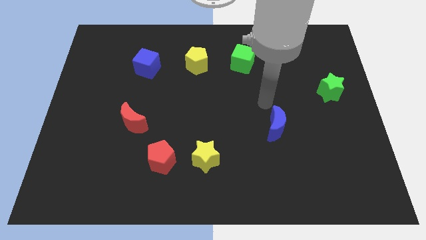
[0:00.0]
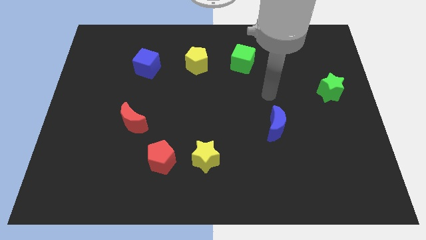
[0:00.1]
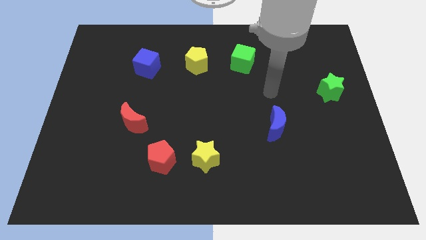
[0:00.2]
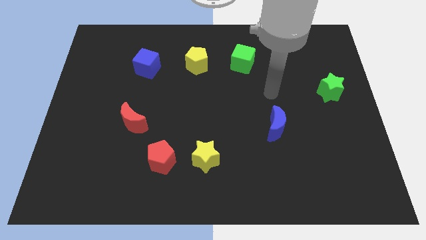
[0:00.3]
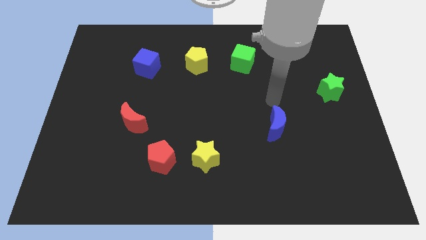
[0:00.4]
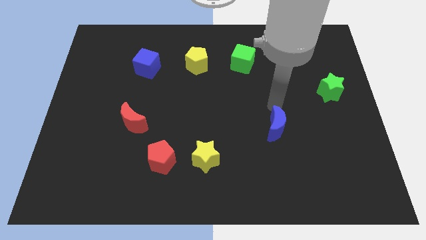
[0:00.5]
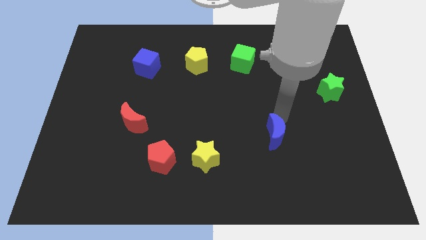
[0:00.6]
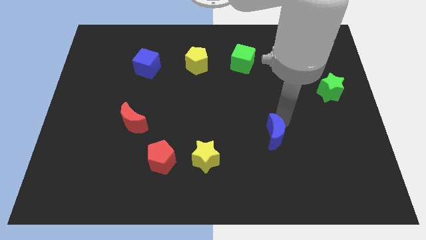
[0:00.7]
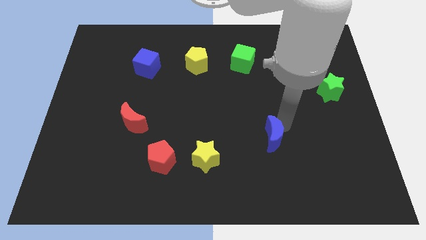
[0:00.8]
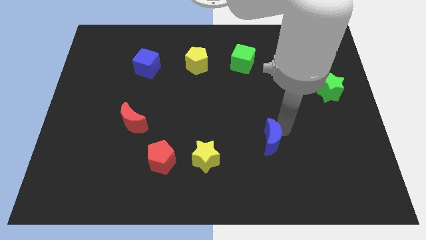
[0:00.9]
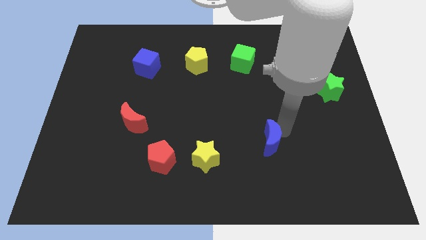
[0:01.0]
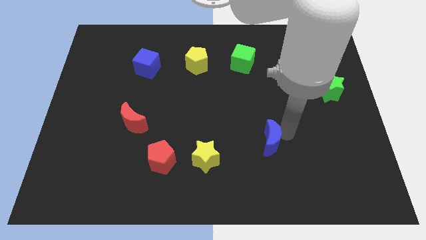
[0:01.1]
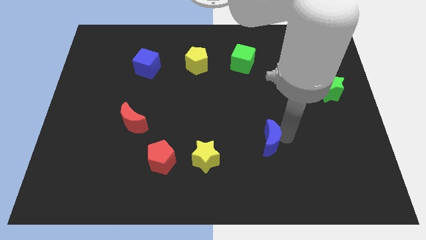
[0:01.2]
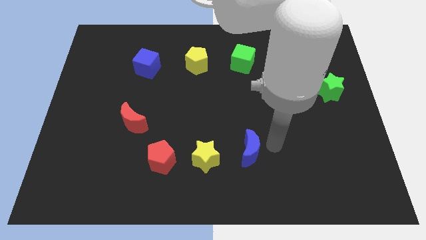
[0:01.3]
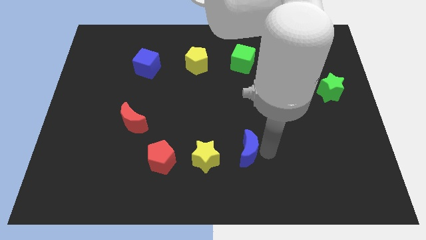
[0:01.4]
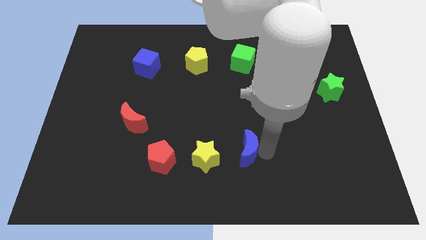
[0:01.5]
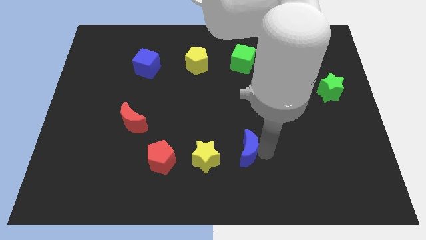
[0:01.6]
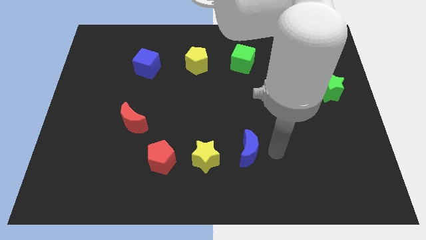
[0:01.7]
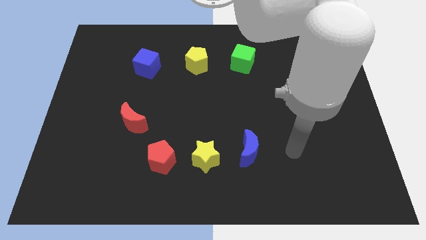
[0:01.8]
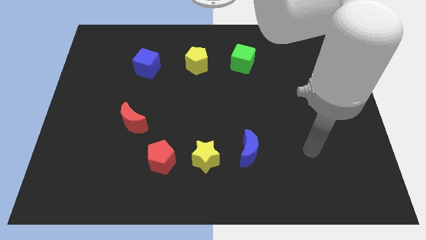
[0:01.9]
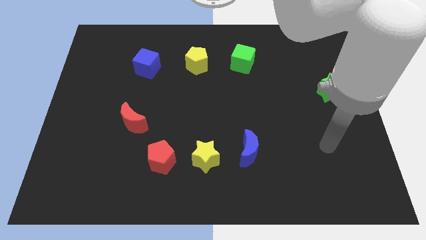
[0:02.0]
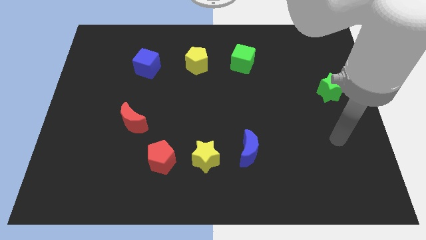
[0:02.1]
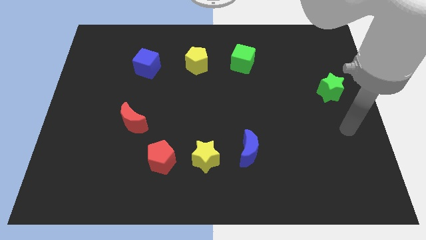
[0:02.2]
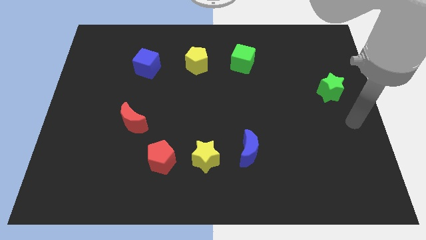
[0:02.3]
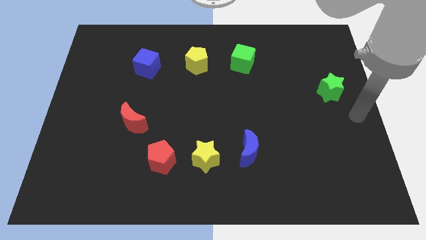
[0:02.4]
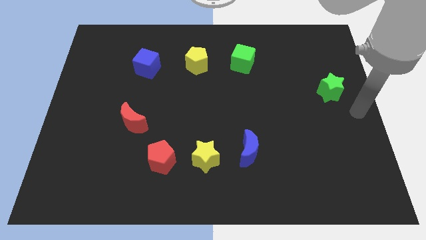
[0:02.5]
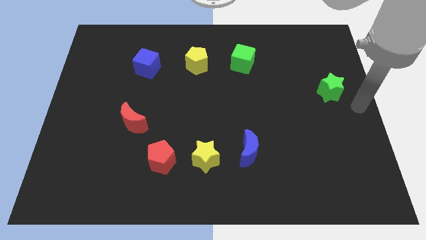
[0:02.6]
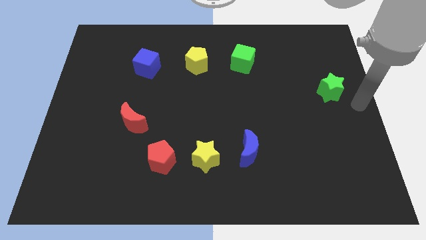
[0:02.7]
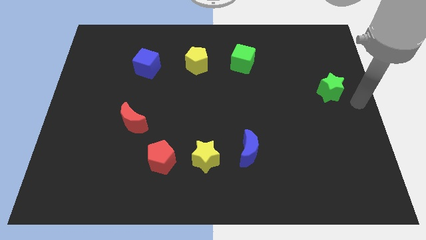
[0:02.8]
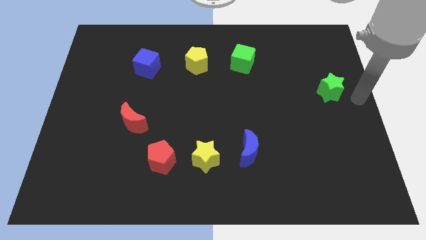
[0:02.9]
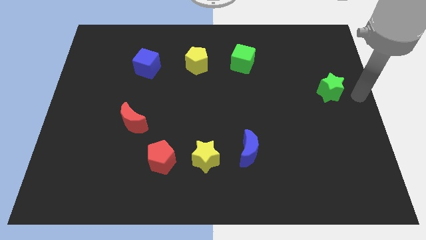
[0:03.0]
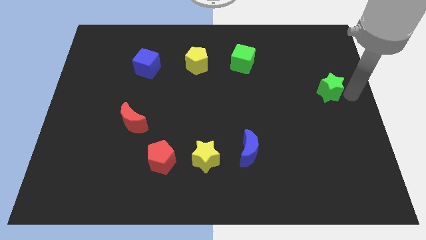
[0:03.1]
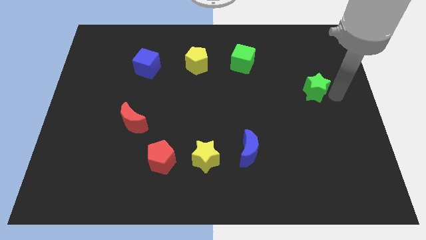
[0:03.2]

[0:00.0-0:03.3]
push the blue moon close to the yellow star

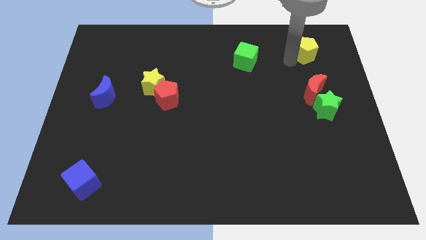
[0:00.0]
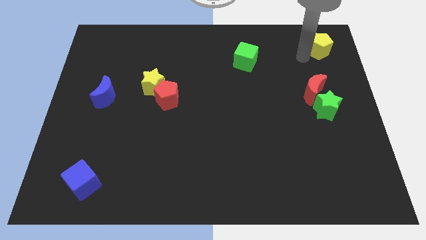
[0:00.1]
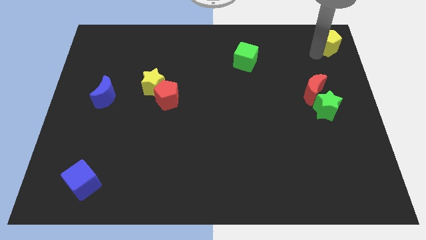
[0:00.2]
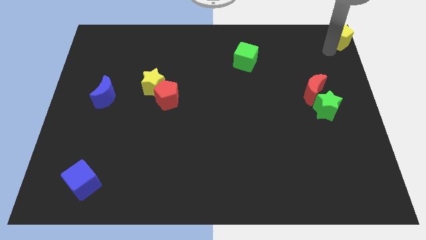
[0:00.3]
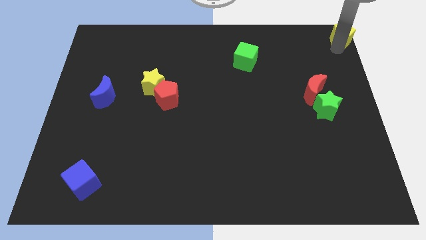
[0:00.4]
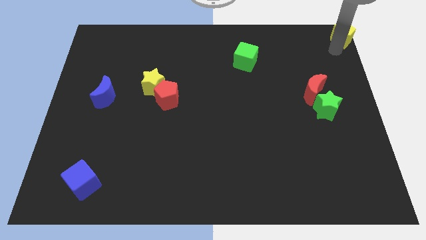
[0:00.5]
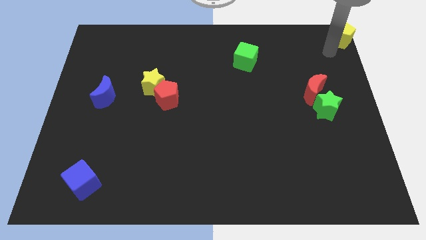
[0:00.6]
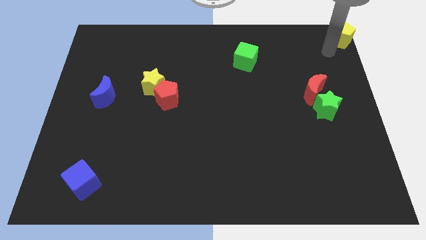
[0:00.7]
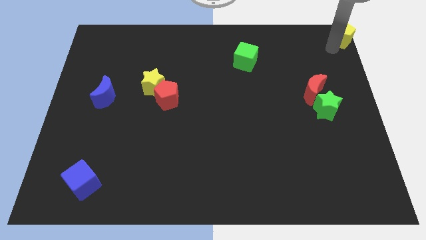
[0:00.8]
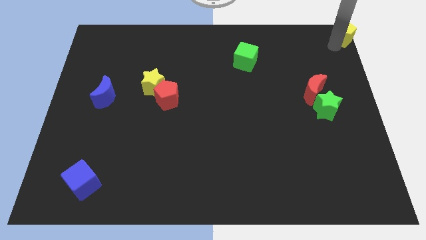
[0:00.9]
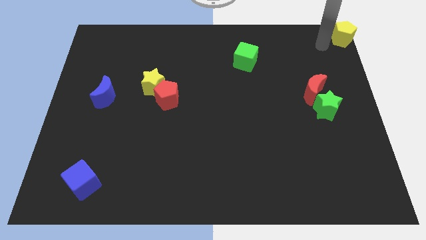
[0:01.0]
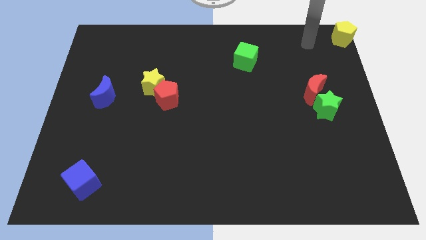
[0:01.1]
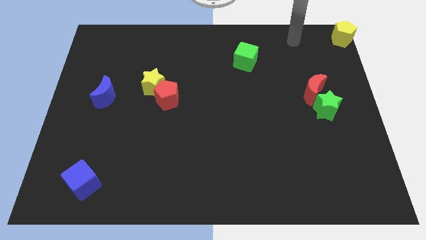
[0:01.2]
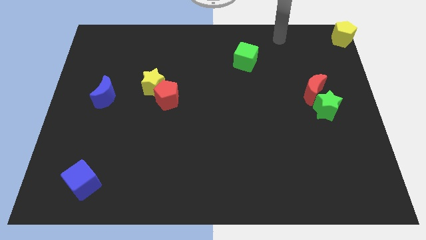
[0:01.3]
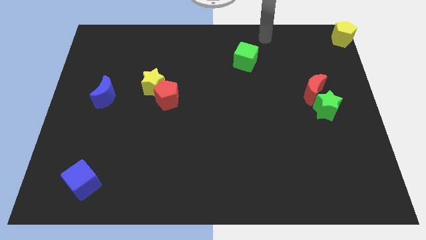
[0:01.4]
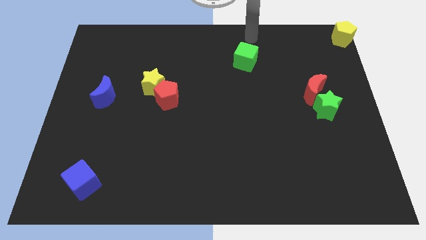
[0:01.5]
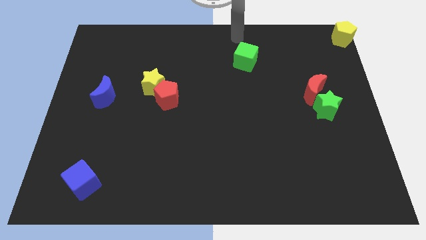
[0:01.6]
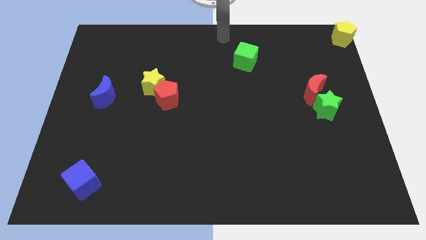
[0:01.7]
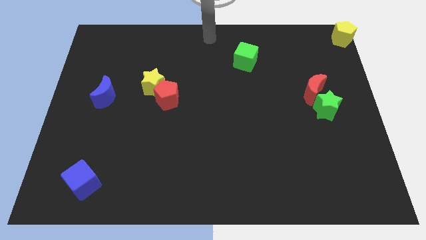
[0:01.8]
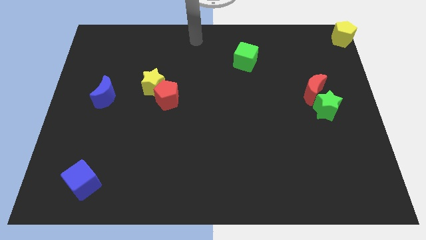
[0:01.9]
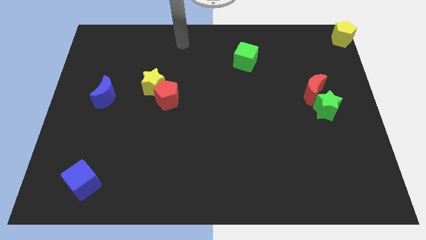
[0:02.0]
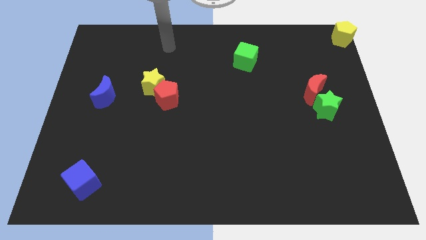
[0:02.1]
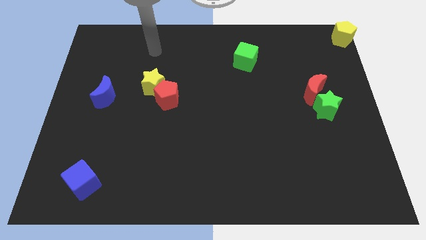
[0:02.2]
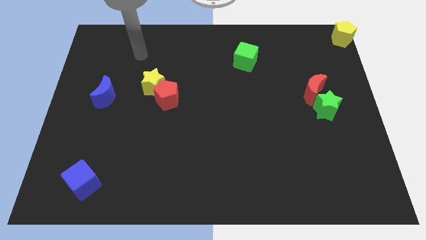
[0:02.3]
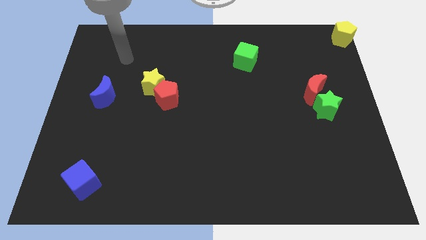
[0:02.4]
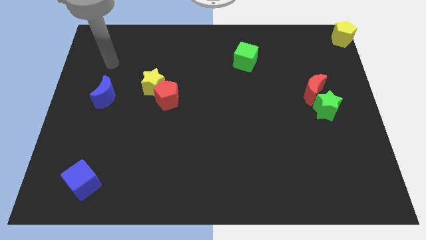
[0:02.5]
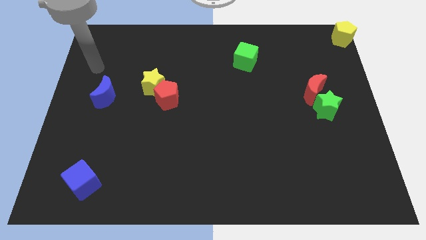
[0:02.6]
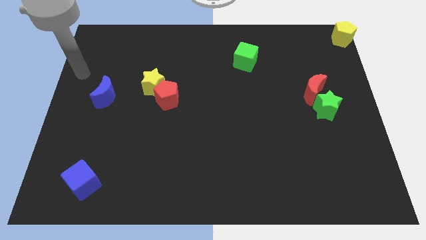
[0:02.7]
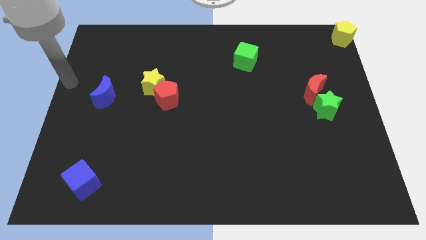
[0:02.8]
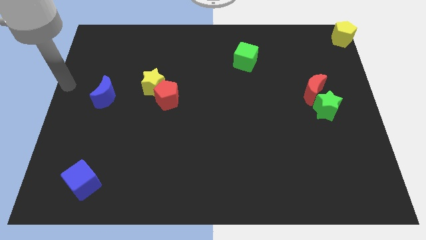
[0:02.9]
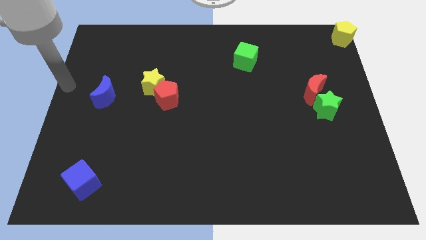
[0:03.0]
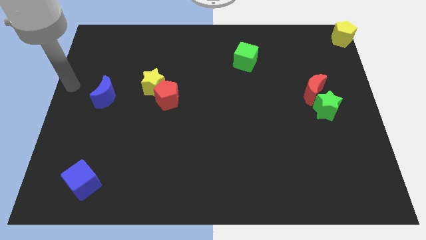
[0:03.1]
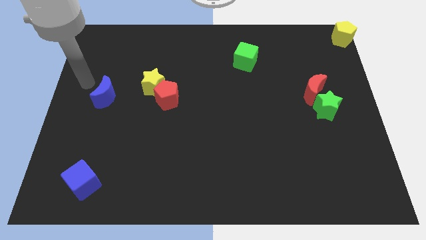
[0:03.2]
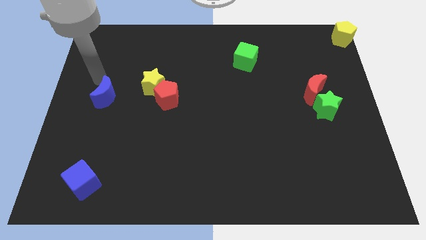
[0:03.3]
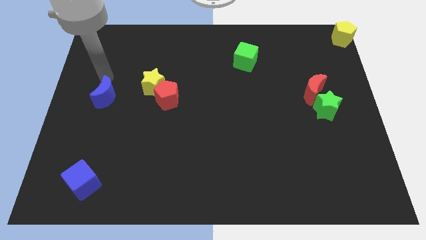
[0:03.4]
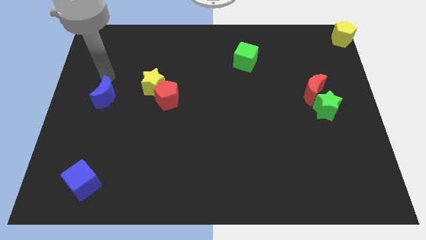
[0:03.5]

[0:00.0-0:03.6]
place the arm to the top of the blue moon

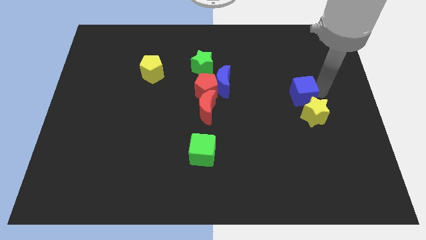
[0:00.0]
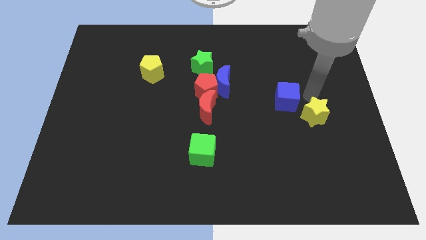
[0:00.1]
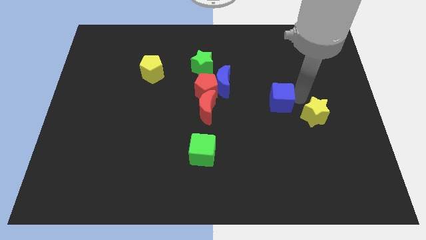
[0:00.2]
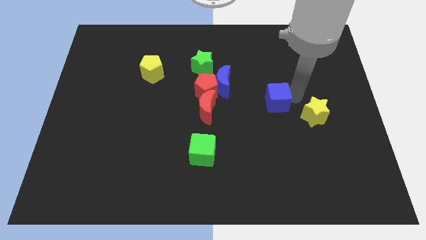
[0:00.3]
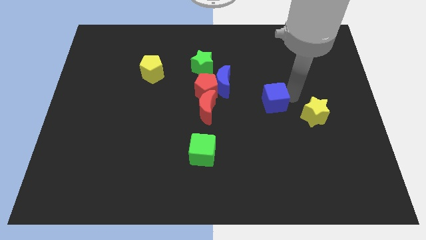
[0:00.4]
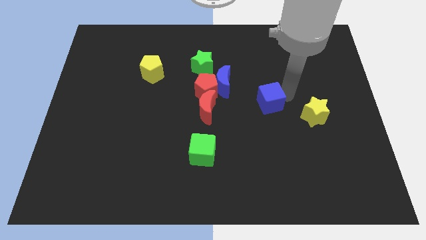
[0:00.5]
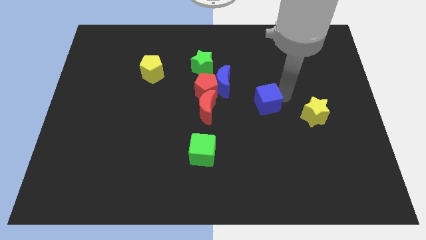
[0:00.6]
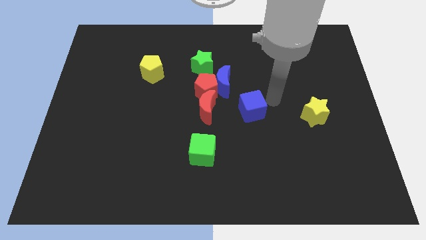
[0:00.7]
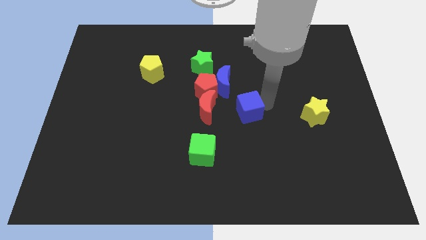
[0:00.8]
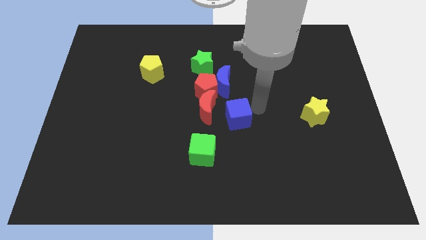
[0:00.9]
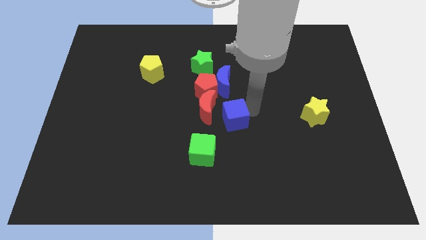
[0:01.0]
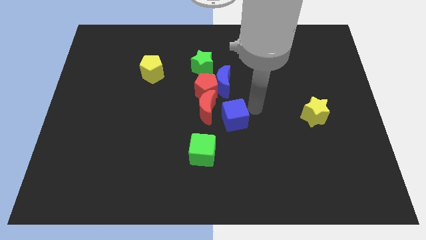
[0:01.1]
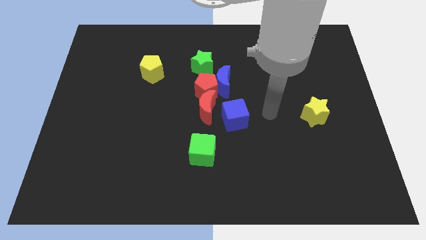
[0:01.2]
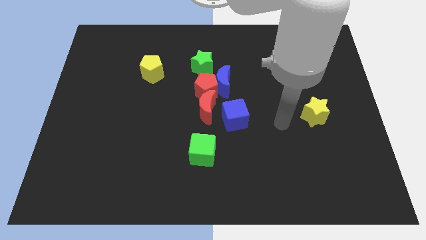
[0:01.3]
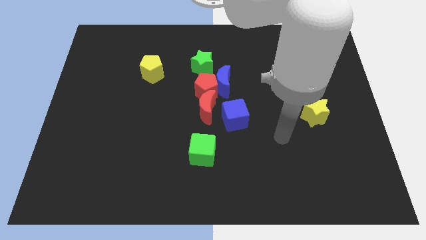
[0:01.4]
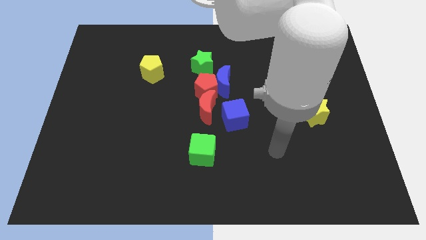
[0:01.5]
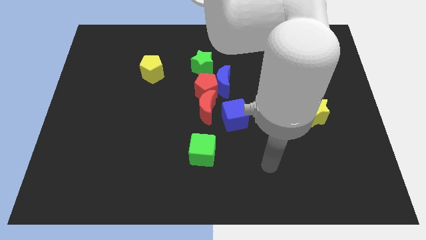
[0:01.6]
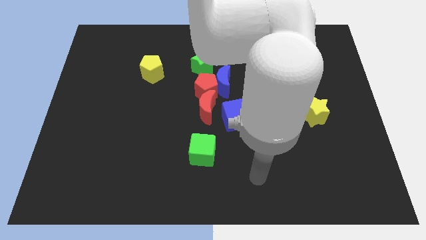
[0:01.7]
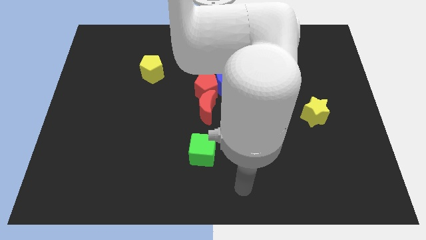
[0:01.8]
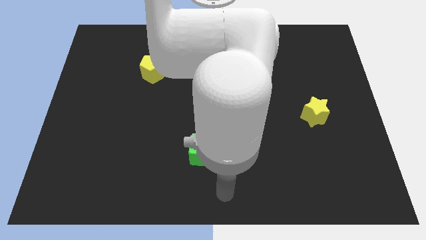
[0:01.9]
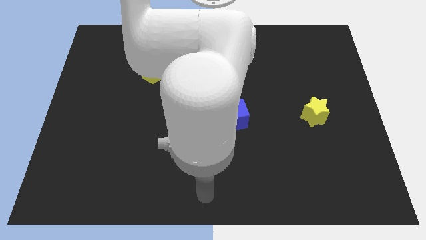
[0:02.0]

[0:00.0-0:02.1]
move the blue cube to the center of the board
